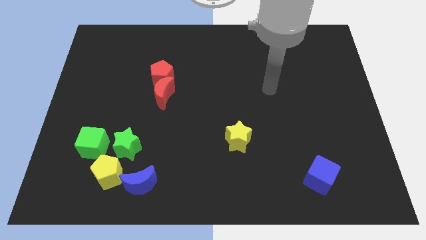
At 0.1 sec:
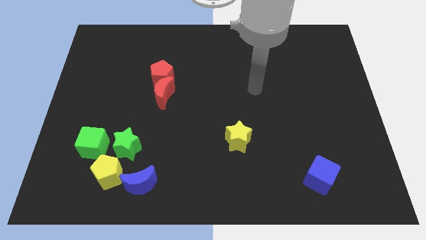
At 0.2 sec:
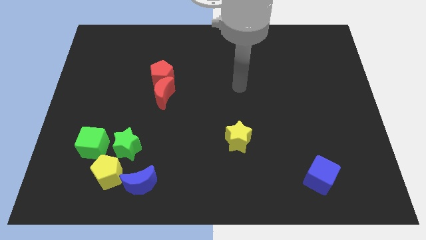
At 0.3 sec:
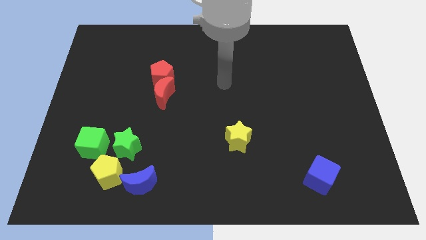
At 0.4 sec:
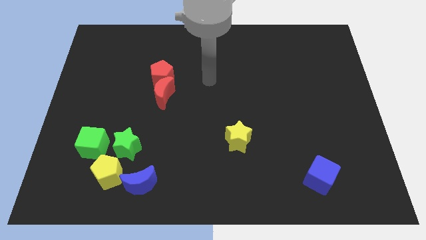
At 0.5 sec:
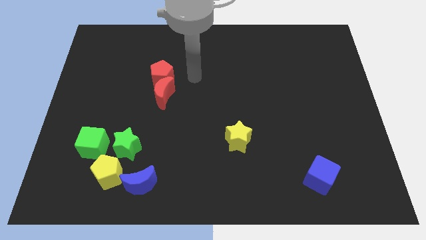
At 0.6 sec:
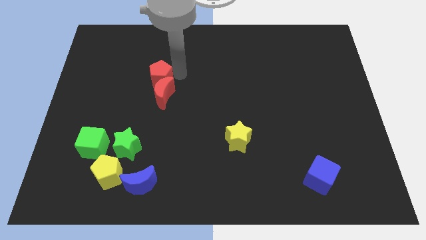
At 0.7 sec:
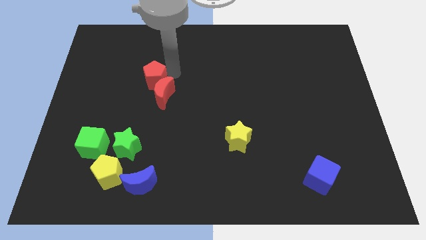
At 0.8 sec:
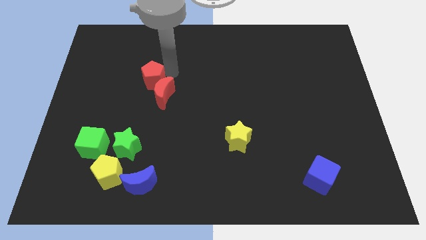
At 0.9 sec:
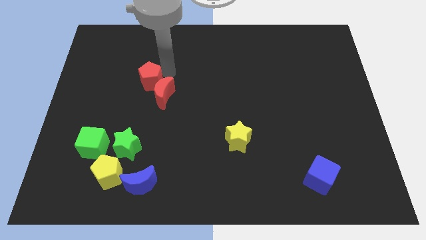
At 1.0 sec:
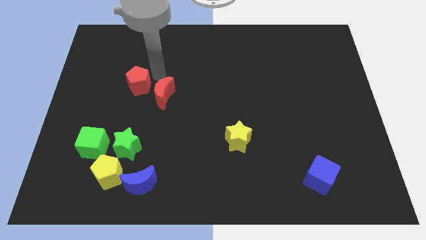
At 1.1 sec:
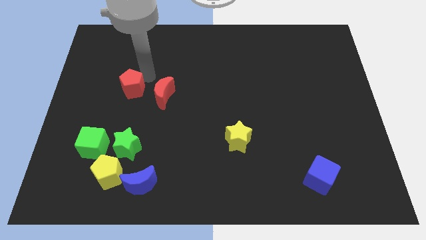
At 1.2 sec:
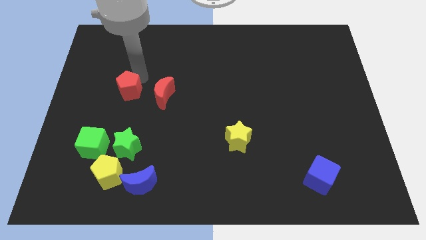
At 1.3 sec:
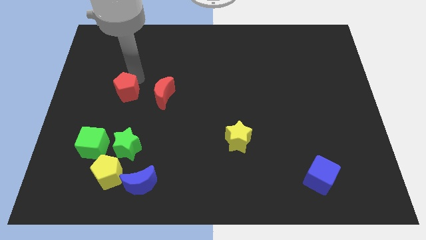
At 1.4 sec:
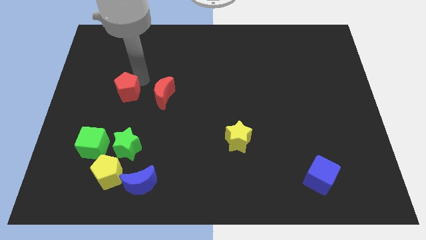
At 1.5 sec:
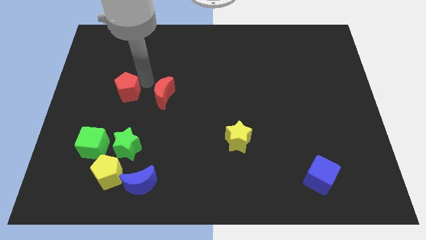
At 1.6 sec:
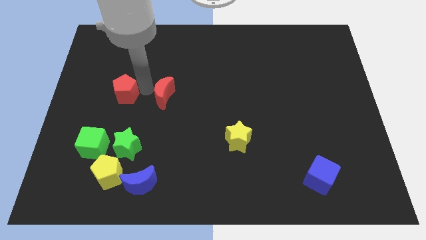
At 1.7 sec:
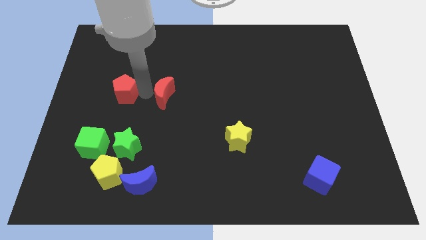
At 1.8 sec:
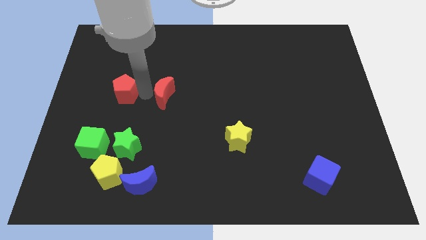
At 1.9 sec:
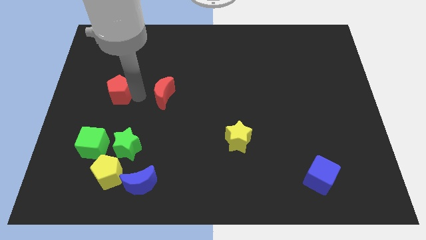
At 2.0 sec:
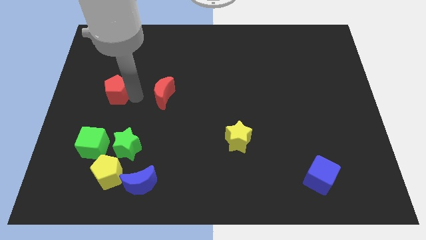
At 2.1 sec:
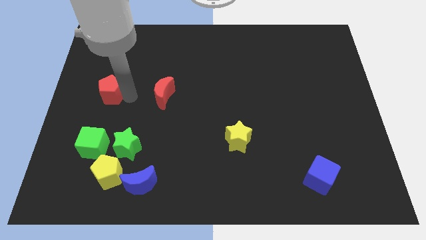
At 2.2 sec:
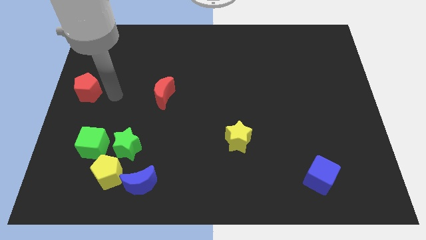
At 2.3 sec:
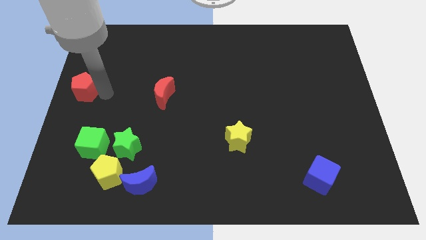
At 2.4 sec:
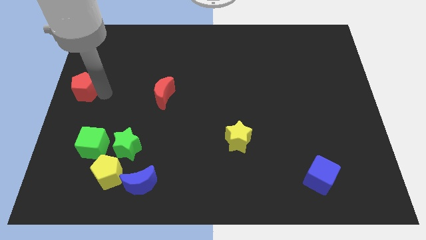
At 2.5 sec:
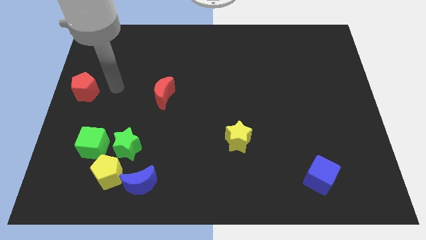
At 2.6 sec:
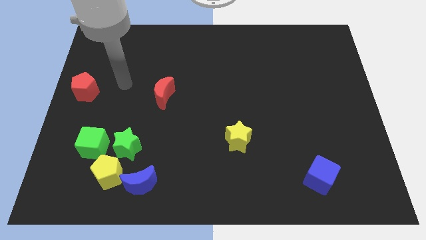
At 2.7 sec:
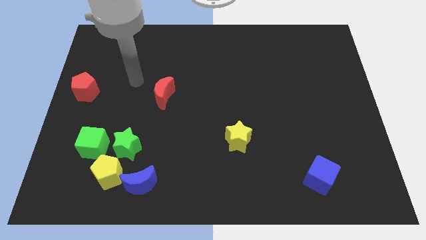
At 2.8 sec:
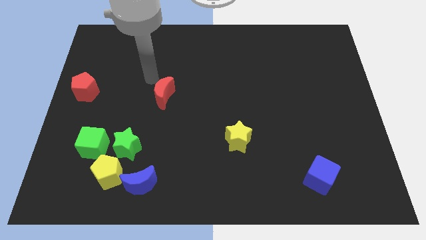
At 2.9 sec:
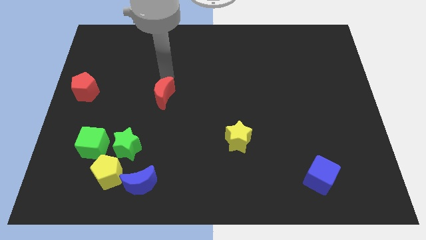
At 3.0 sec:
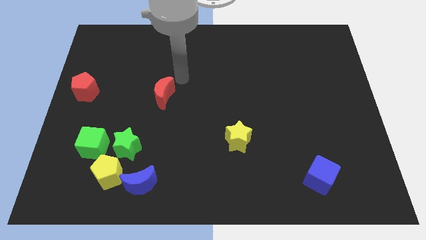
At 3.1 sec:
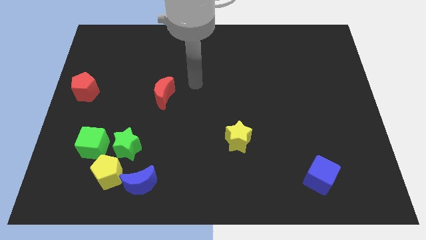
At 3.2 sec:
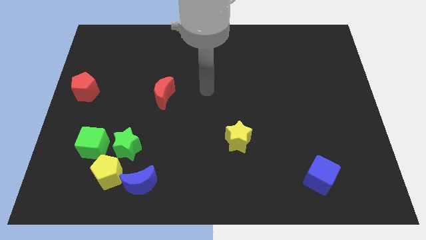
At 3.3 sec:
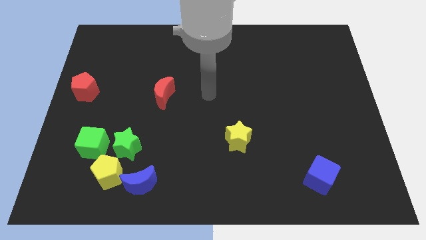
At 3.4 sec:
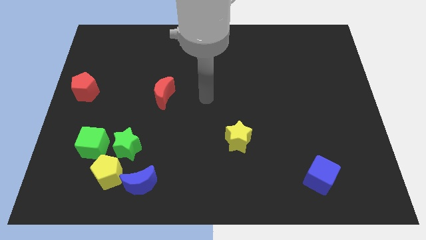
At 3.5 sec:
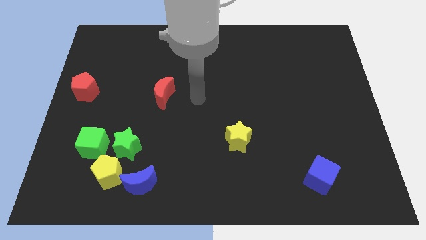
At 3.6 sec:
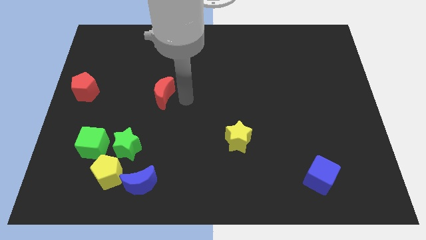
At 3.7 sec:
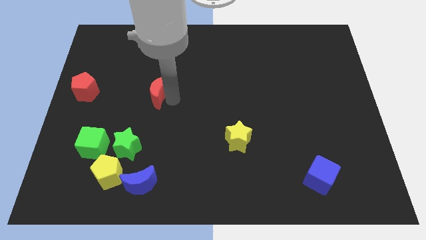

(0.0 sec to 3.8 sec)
separate the red pentagon from the red moon

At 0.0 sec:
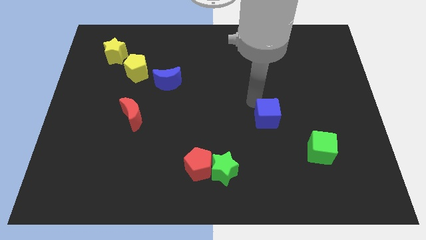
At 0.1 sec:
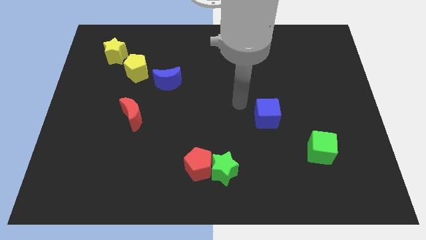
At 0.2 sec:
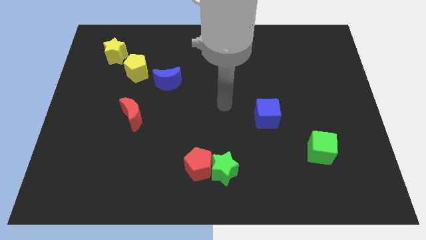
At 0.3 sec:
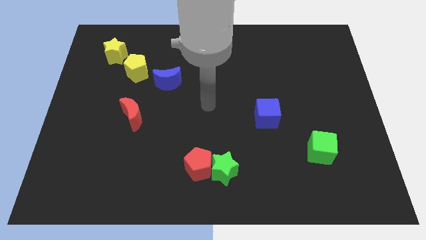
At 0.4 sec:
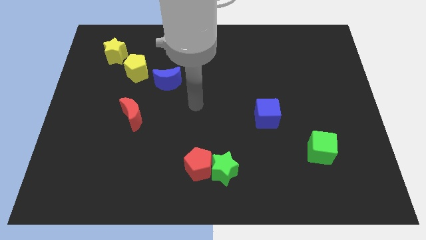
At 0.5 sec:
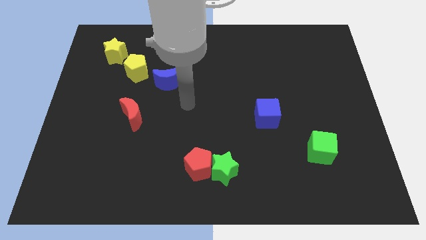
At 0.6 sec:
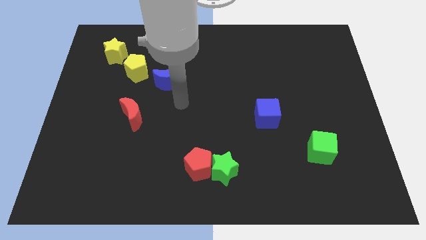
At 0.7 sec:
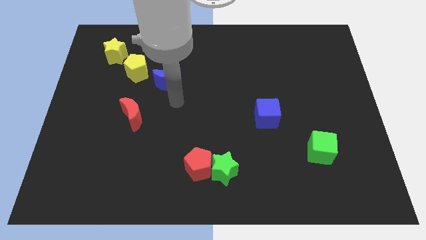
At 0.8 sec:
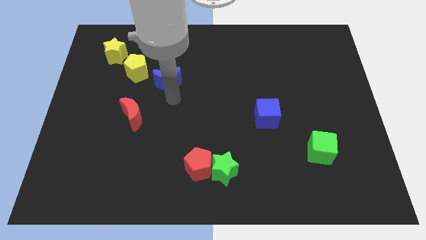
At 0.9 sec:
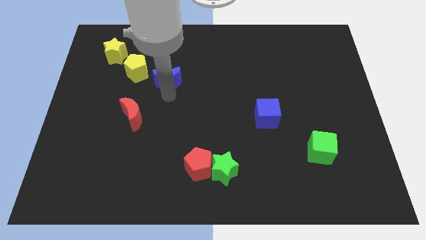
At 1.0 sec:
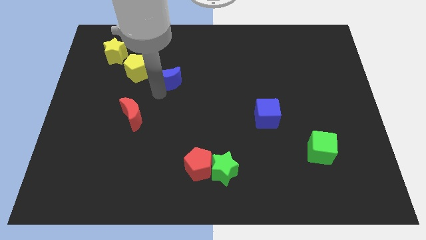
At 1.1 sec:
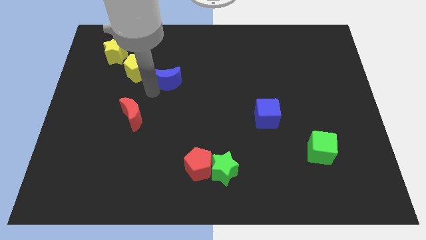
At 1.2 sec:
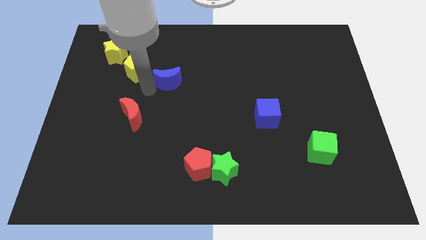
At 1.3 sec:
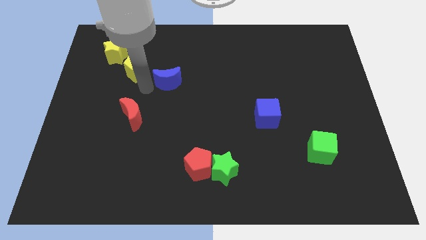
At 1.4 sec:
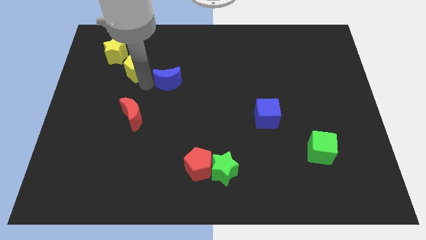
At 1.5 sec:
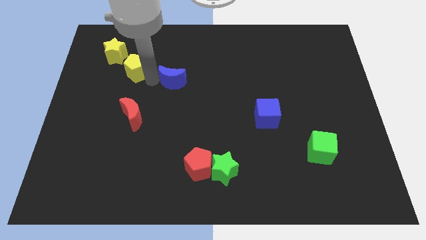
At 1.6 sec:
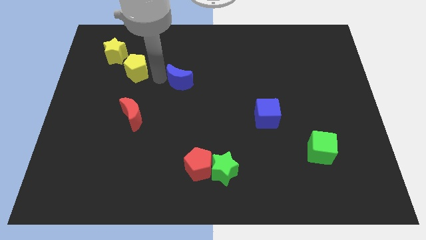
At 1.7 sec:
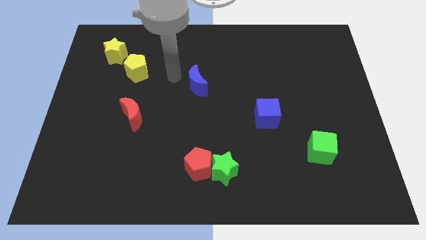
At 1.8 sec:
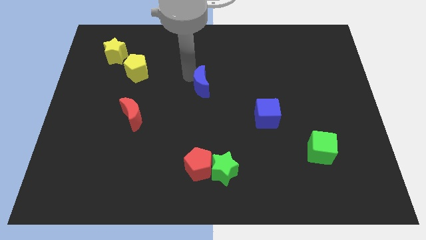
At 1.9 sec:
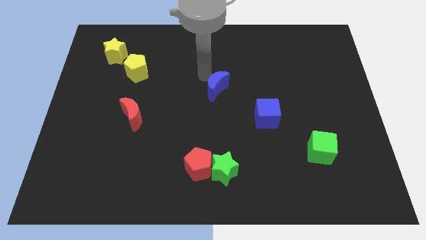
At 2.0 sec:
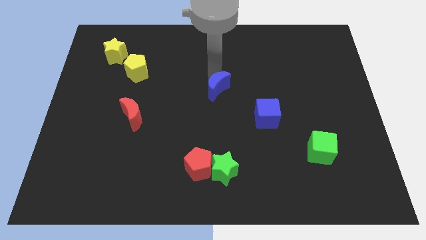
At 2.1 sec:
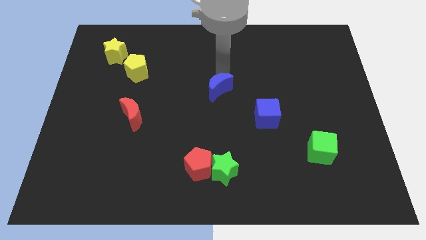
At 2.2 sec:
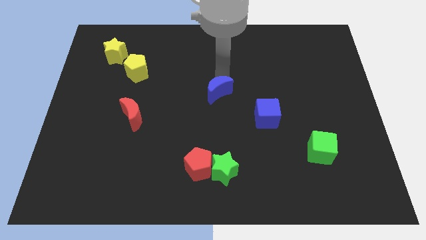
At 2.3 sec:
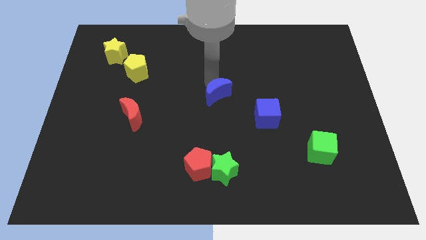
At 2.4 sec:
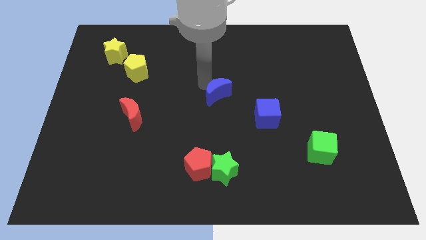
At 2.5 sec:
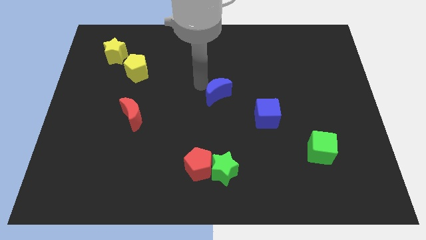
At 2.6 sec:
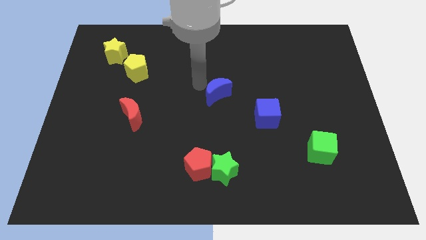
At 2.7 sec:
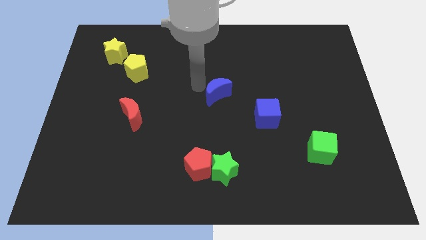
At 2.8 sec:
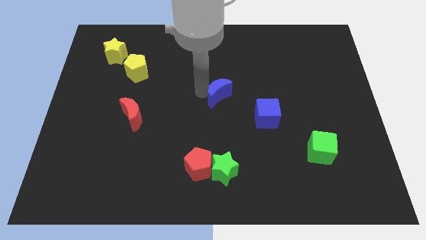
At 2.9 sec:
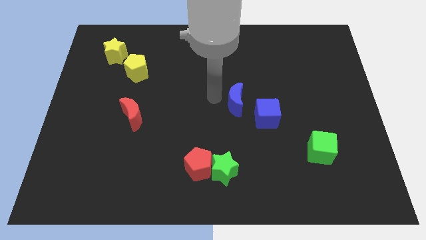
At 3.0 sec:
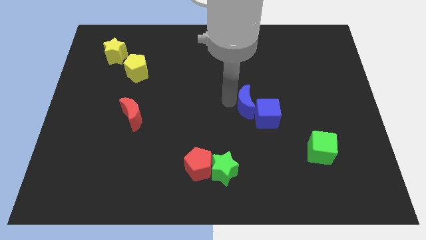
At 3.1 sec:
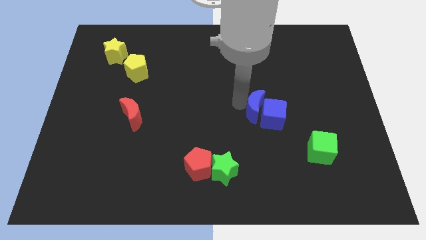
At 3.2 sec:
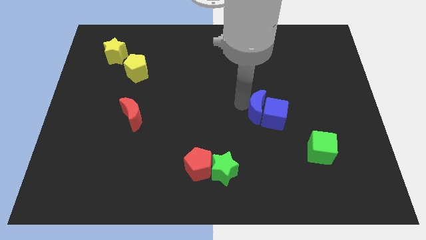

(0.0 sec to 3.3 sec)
push the blue moon into the blue cube

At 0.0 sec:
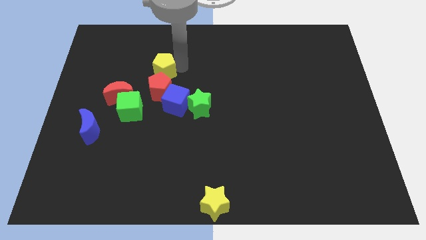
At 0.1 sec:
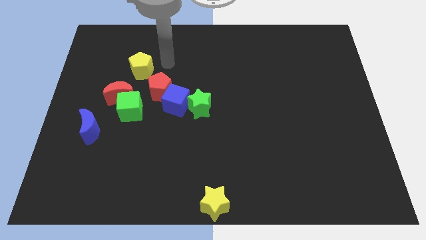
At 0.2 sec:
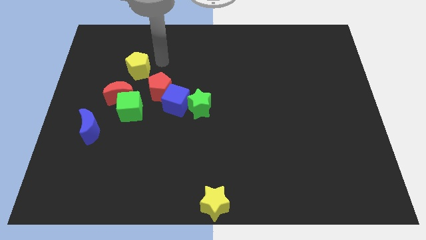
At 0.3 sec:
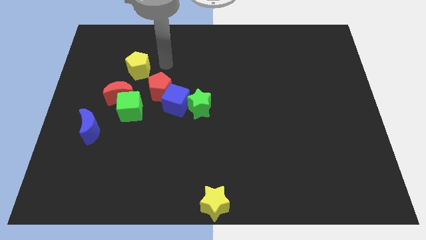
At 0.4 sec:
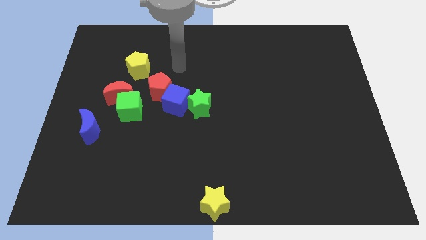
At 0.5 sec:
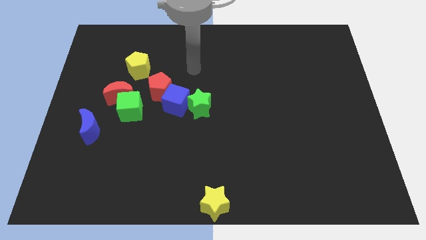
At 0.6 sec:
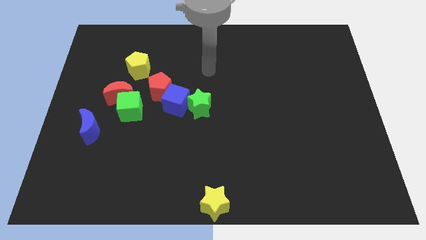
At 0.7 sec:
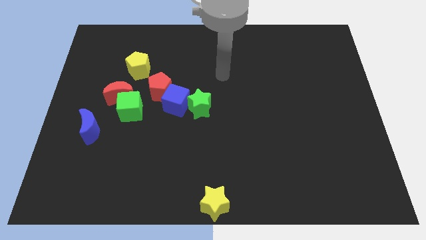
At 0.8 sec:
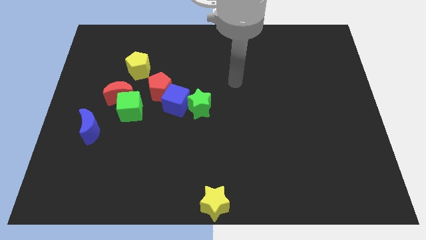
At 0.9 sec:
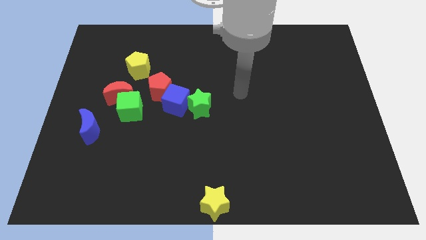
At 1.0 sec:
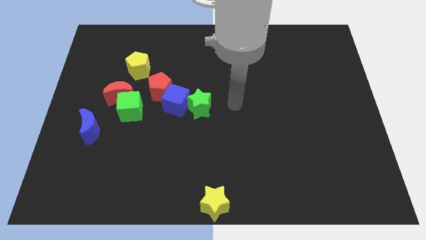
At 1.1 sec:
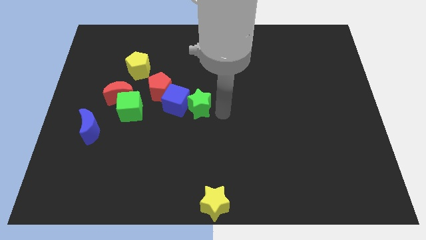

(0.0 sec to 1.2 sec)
push yellow pentagon diagonally top left to the red pentagon

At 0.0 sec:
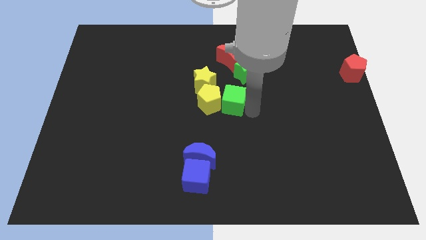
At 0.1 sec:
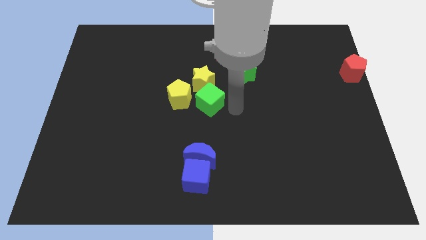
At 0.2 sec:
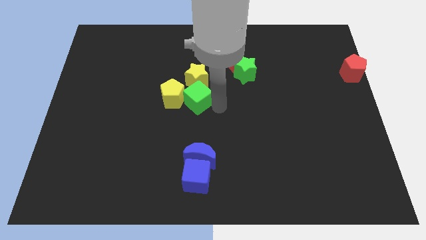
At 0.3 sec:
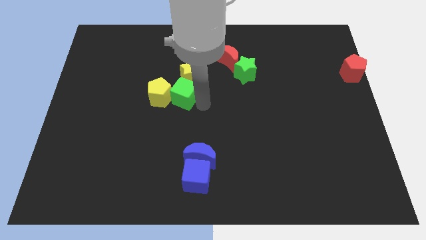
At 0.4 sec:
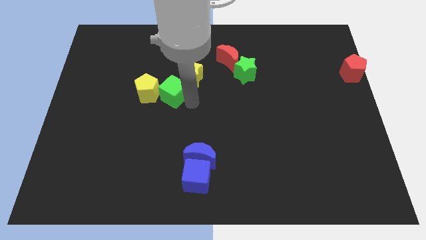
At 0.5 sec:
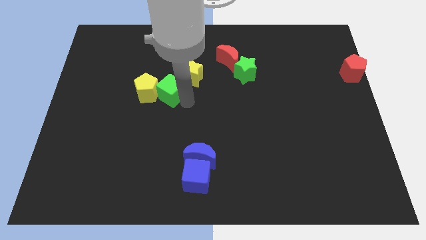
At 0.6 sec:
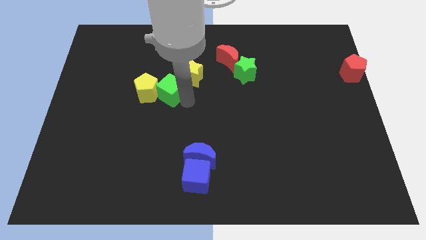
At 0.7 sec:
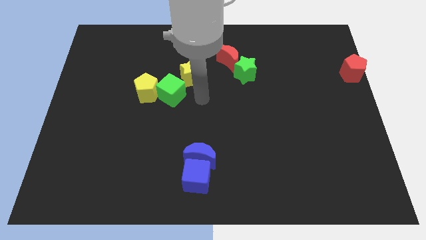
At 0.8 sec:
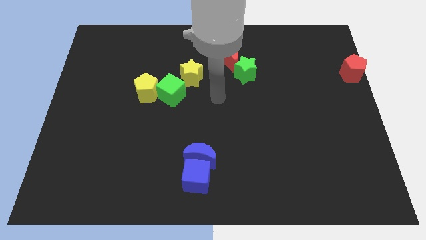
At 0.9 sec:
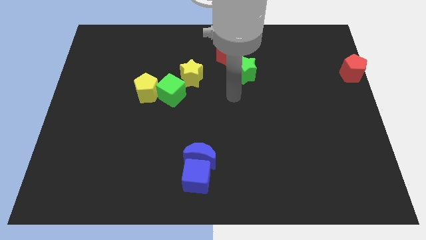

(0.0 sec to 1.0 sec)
push the yellow pentagon with green square
